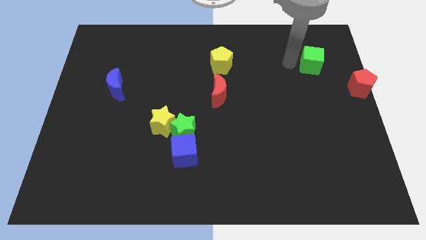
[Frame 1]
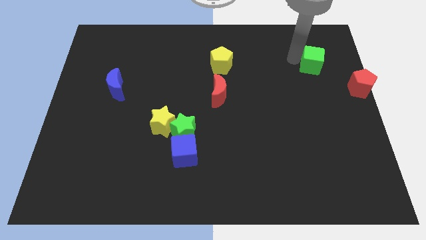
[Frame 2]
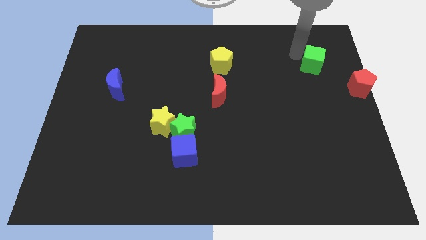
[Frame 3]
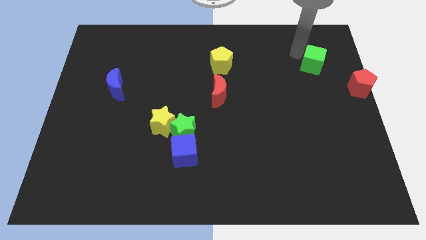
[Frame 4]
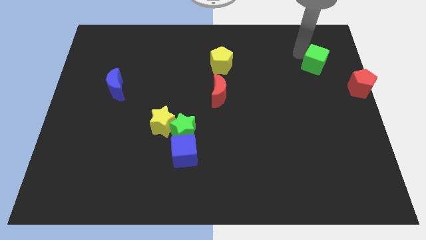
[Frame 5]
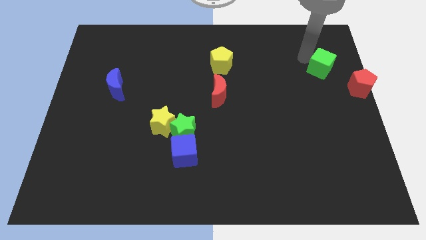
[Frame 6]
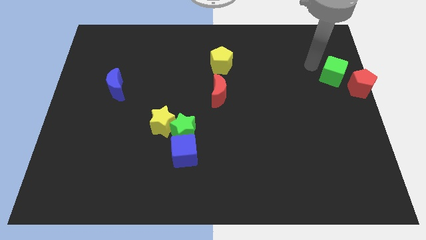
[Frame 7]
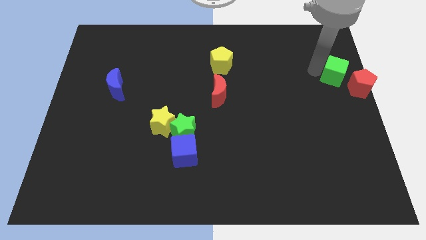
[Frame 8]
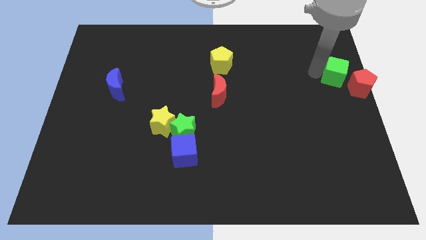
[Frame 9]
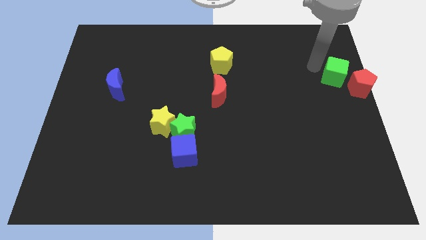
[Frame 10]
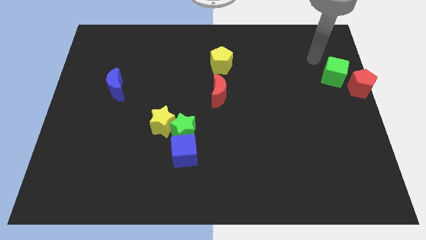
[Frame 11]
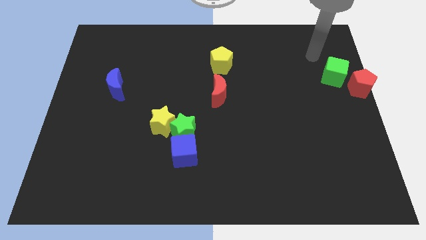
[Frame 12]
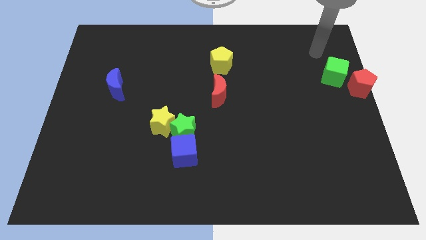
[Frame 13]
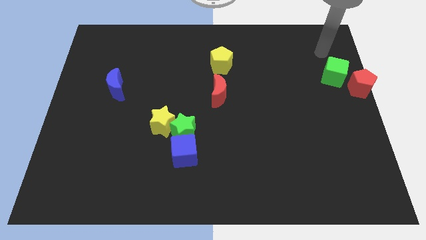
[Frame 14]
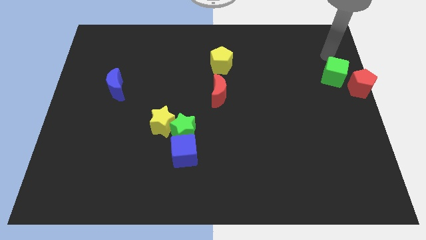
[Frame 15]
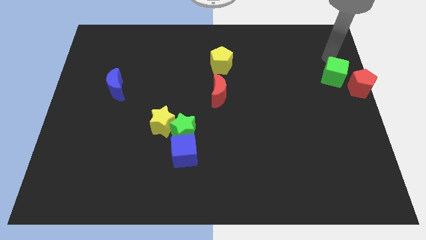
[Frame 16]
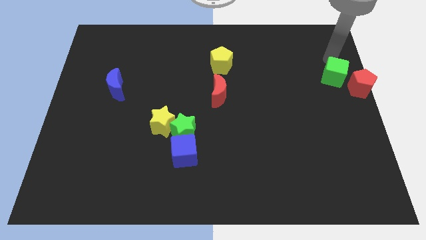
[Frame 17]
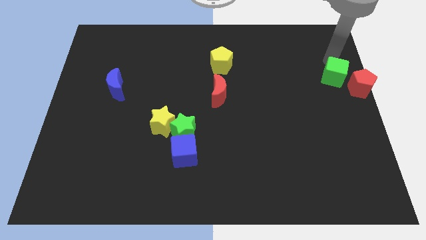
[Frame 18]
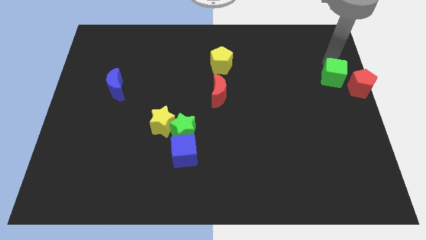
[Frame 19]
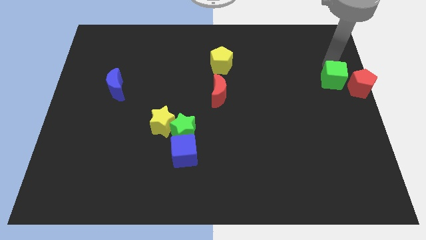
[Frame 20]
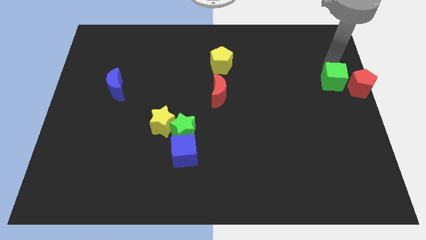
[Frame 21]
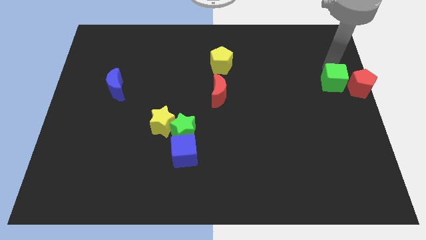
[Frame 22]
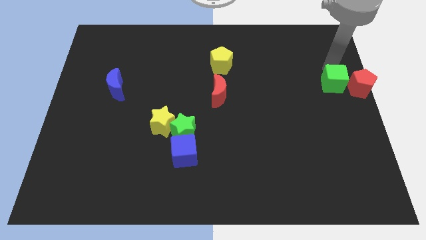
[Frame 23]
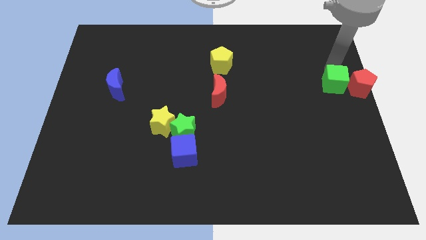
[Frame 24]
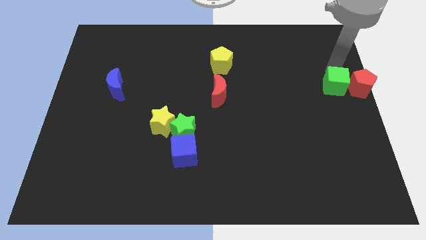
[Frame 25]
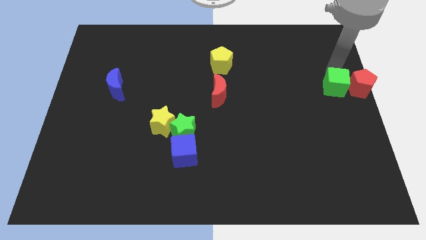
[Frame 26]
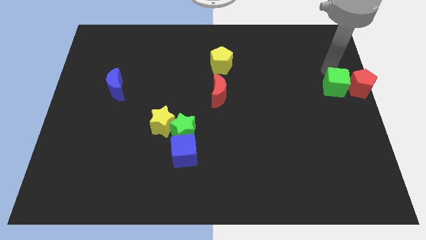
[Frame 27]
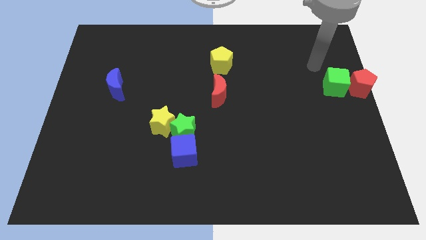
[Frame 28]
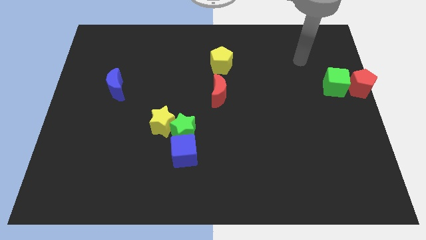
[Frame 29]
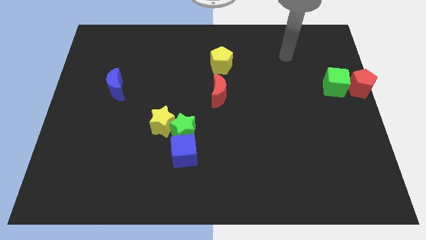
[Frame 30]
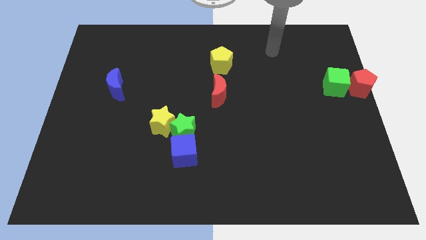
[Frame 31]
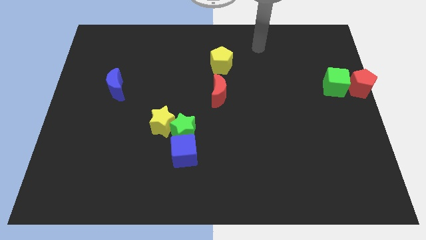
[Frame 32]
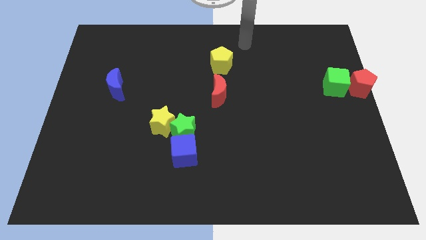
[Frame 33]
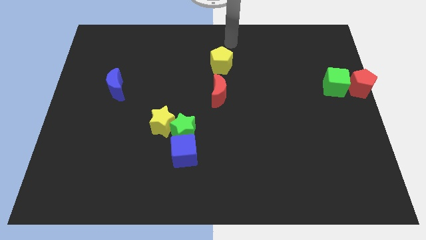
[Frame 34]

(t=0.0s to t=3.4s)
place the green cube left to the red pentagon

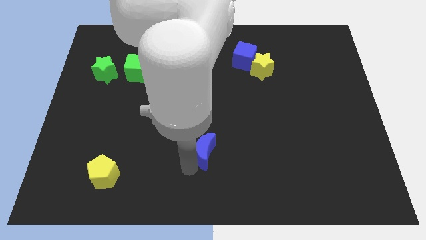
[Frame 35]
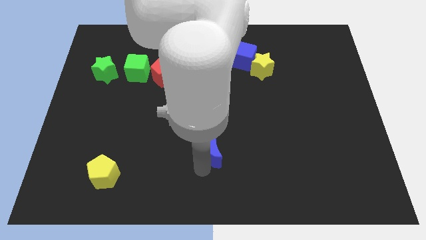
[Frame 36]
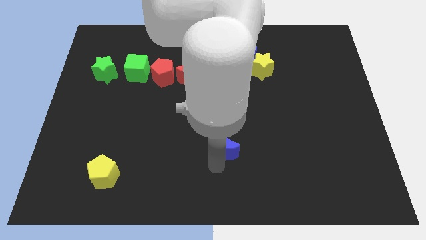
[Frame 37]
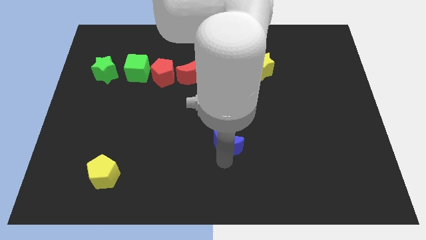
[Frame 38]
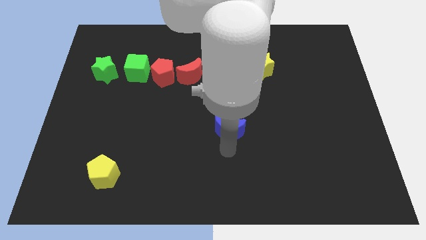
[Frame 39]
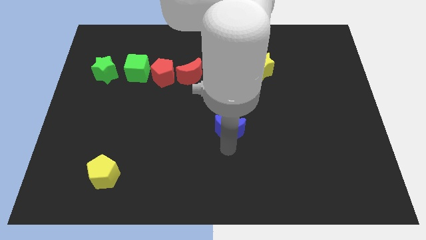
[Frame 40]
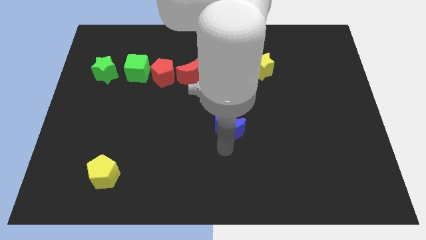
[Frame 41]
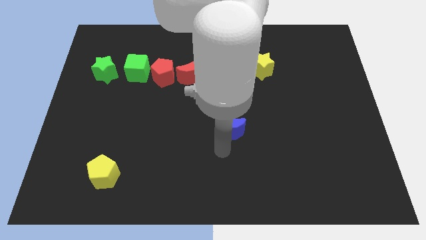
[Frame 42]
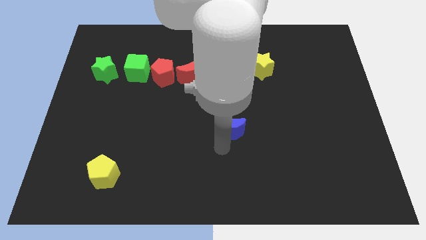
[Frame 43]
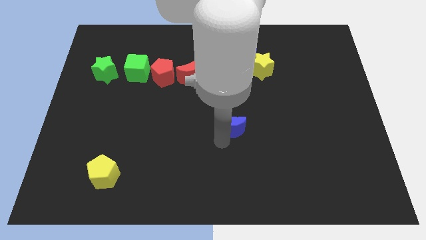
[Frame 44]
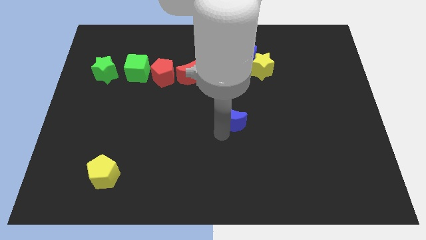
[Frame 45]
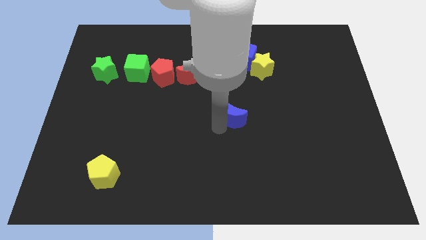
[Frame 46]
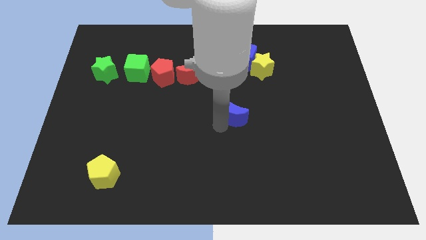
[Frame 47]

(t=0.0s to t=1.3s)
push the blue crescent vertically below the blue cube

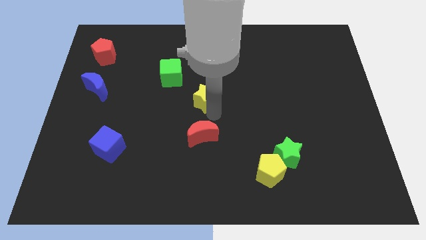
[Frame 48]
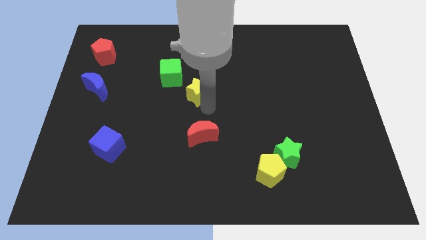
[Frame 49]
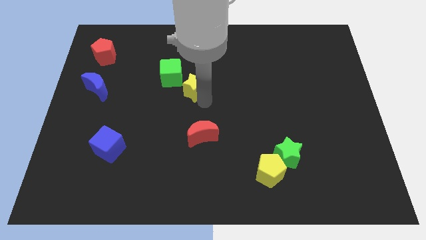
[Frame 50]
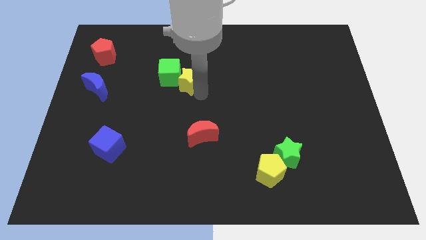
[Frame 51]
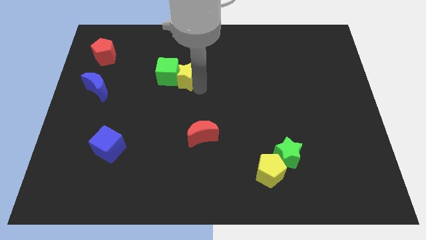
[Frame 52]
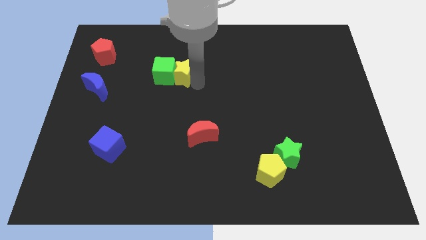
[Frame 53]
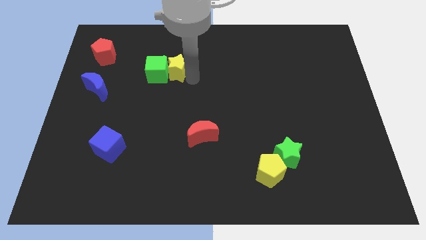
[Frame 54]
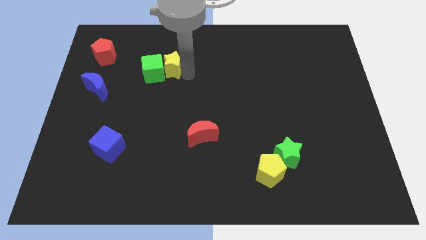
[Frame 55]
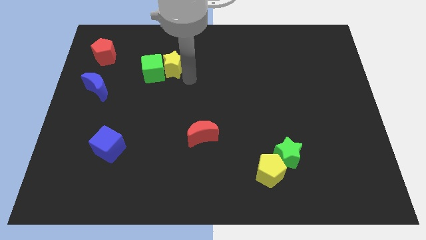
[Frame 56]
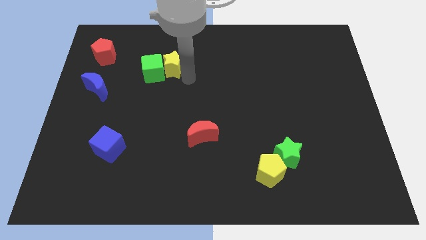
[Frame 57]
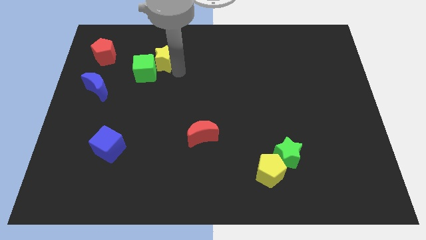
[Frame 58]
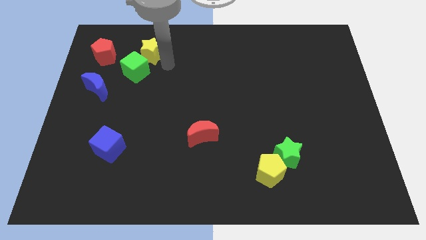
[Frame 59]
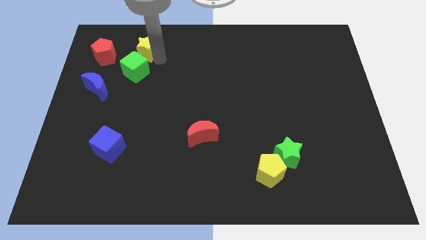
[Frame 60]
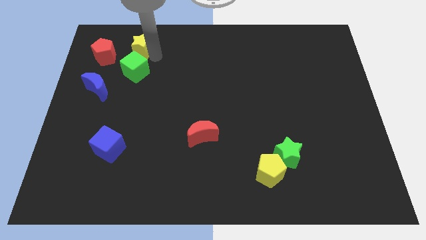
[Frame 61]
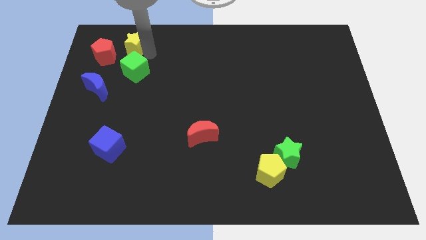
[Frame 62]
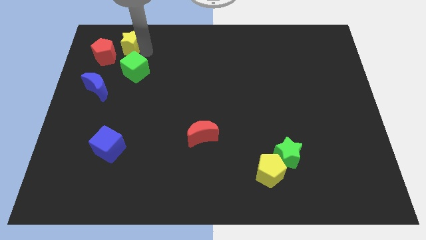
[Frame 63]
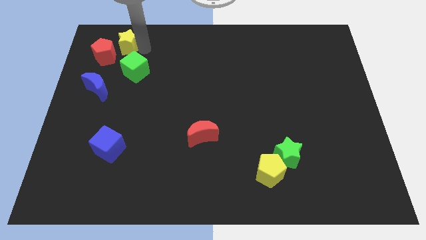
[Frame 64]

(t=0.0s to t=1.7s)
move the yellow star into the green cube

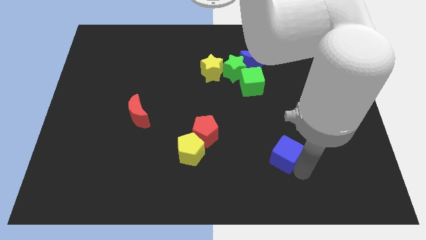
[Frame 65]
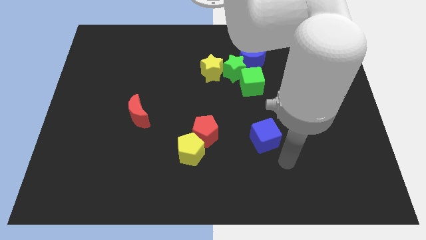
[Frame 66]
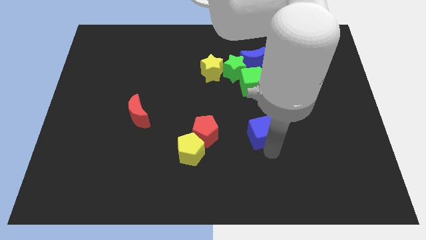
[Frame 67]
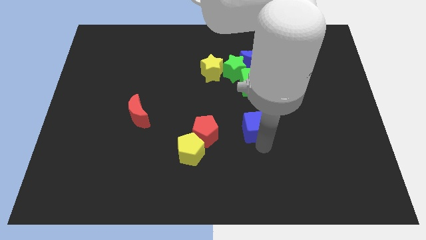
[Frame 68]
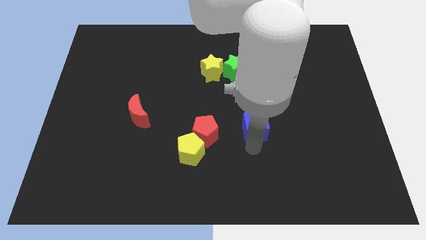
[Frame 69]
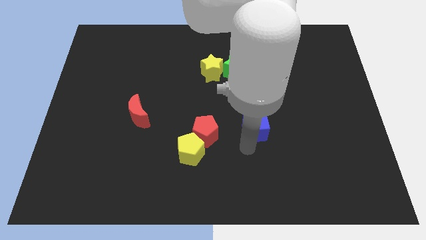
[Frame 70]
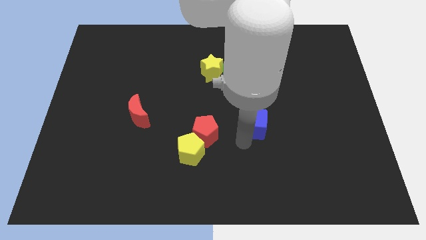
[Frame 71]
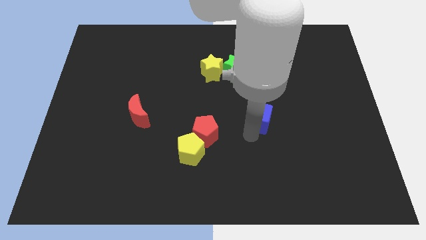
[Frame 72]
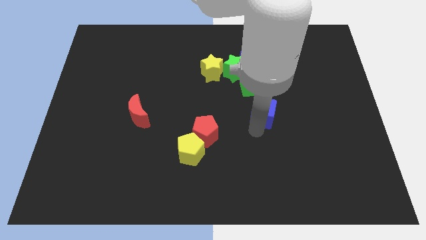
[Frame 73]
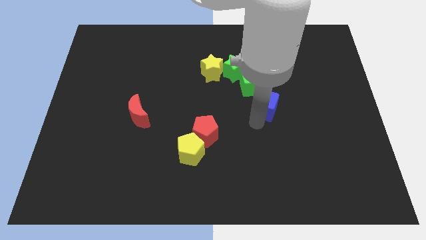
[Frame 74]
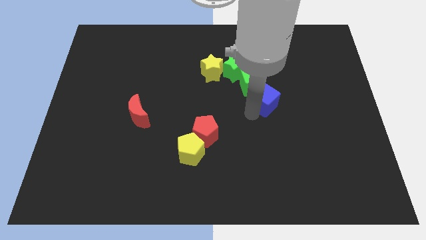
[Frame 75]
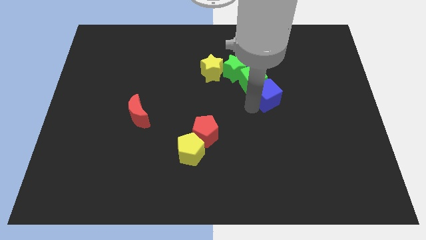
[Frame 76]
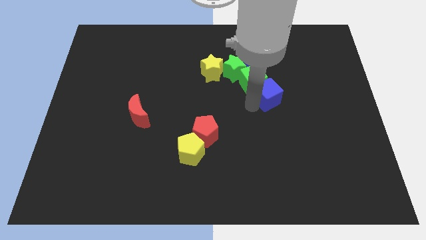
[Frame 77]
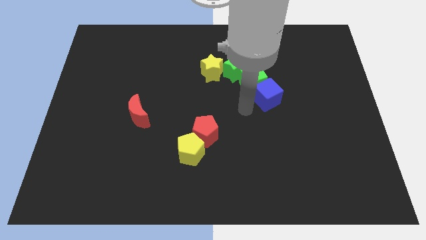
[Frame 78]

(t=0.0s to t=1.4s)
push blue cube towards green cube

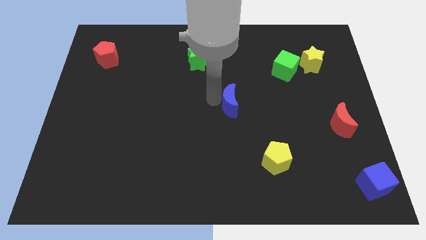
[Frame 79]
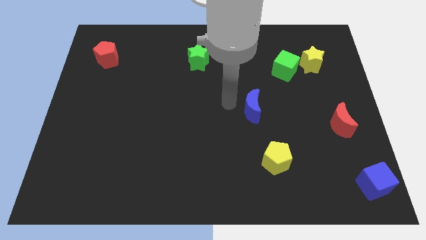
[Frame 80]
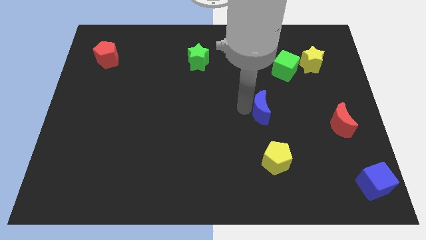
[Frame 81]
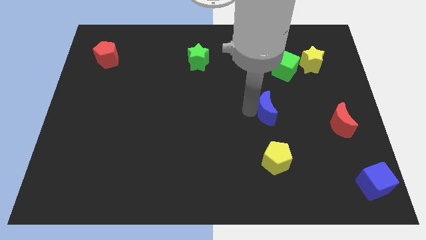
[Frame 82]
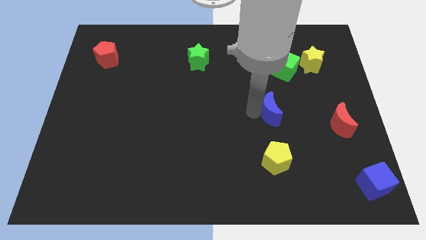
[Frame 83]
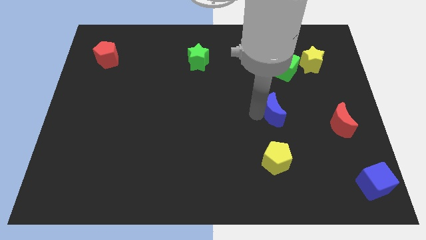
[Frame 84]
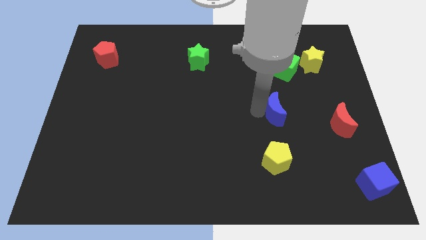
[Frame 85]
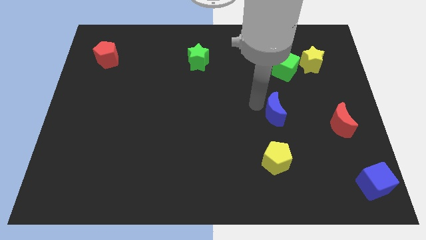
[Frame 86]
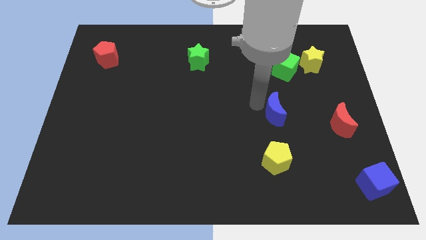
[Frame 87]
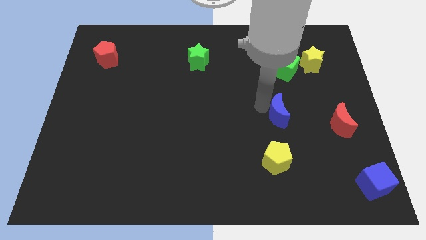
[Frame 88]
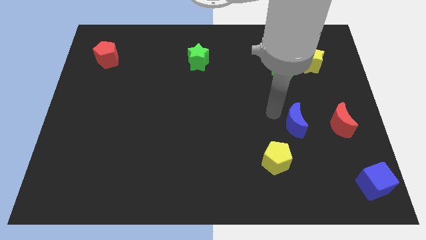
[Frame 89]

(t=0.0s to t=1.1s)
move the blue crescent to the bottom of the green cube

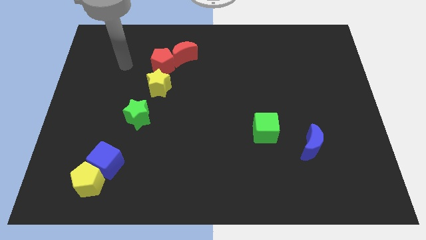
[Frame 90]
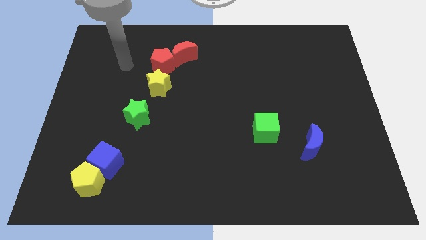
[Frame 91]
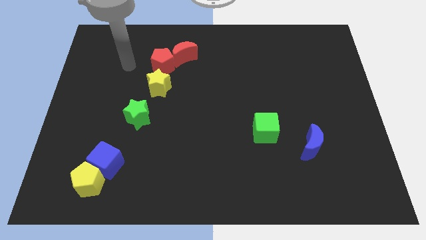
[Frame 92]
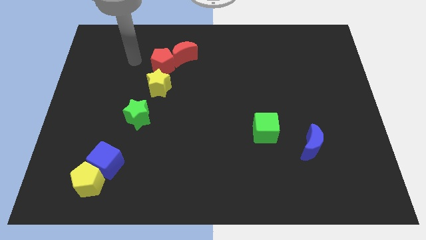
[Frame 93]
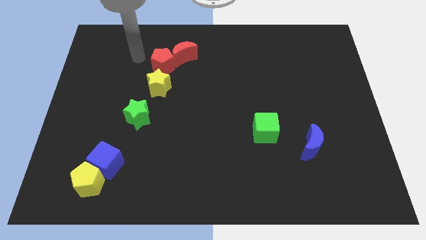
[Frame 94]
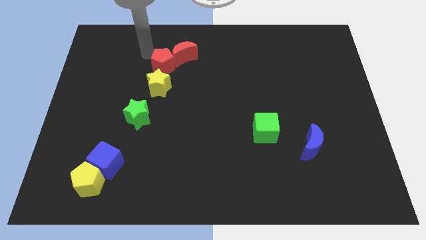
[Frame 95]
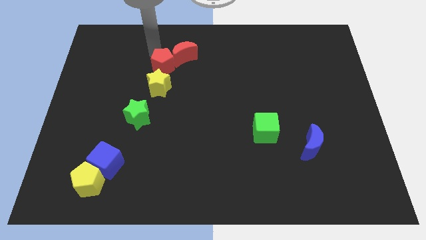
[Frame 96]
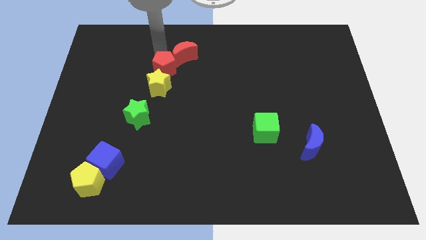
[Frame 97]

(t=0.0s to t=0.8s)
place arm on top of red pentagon
